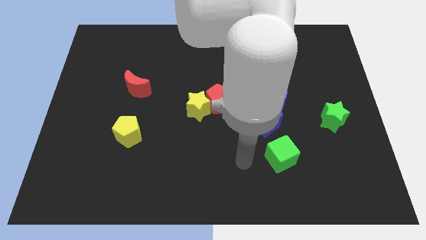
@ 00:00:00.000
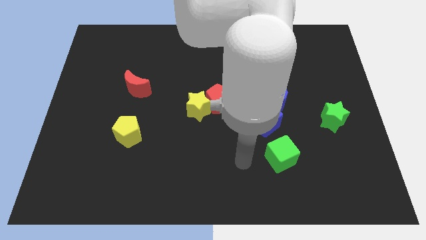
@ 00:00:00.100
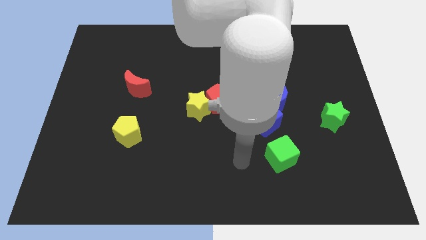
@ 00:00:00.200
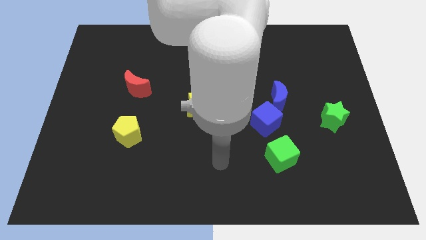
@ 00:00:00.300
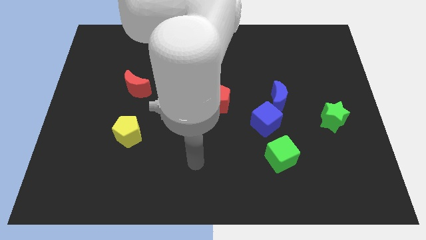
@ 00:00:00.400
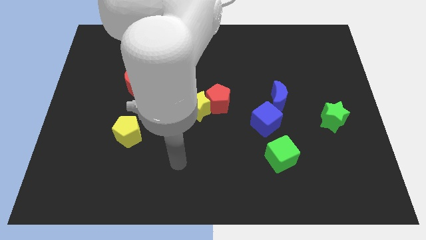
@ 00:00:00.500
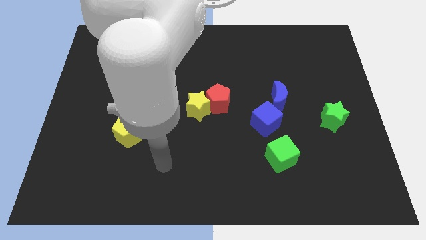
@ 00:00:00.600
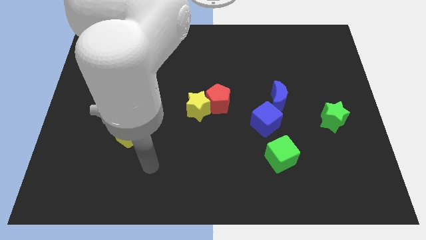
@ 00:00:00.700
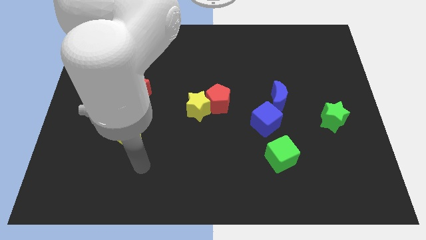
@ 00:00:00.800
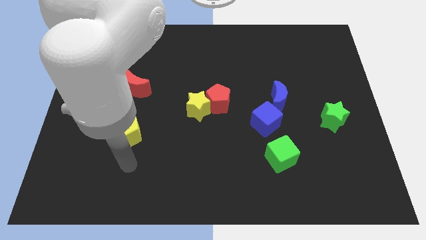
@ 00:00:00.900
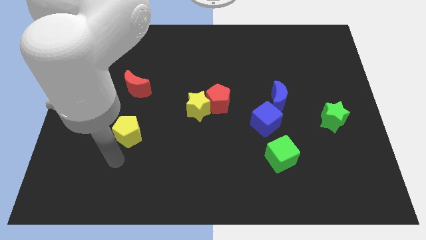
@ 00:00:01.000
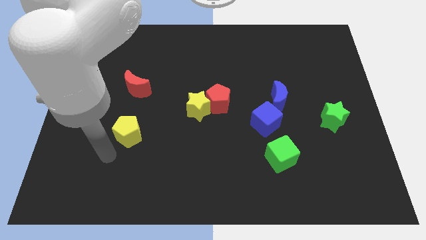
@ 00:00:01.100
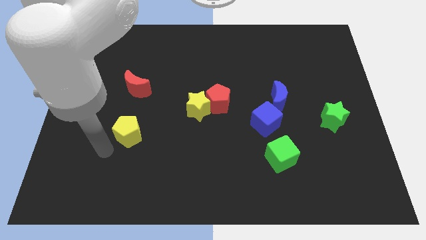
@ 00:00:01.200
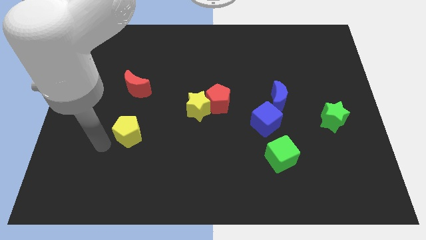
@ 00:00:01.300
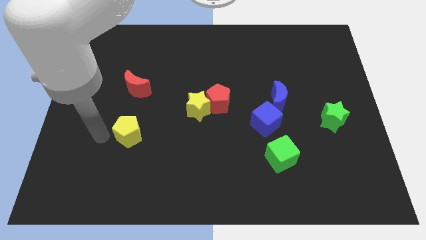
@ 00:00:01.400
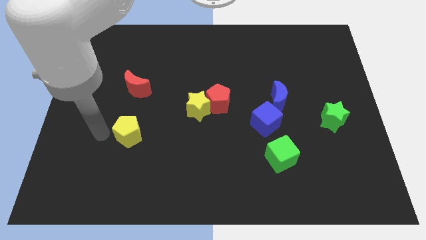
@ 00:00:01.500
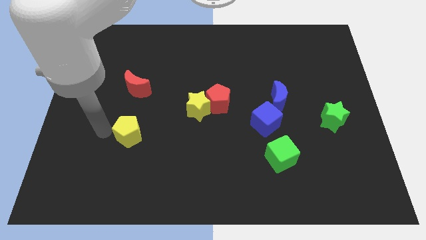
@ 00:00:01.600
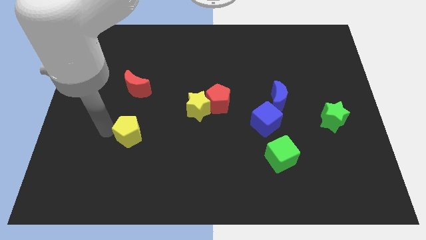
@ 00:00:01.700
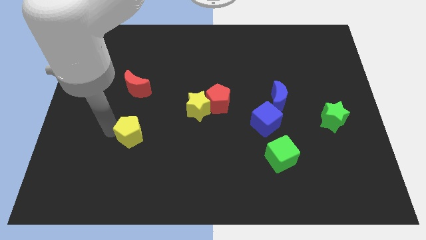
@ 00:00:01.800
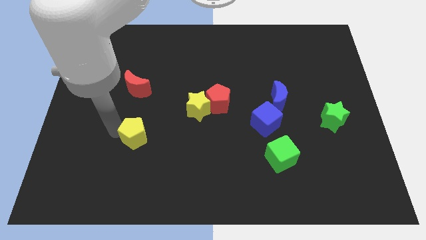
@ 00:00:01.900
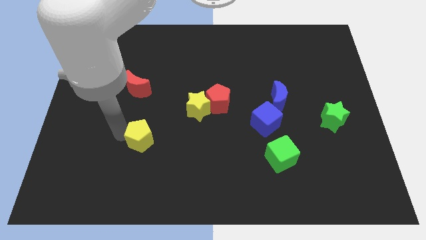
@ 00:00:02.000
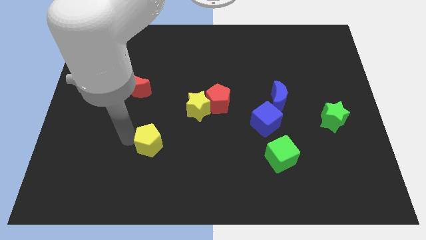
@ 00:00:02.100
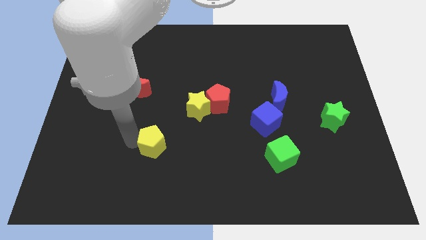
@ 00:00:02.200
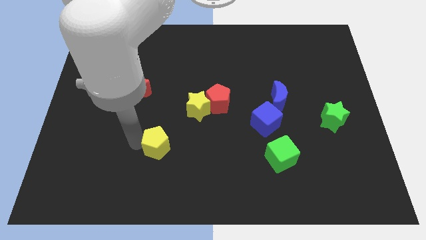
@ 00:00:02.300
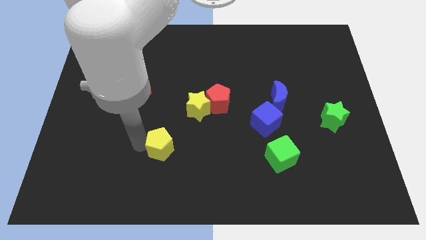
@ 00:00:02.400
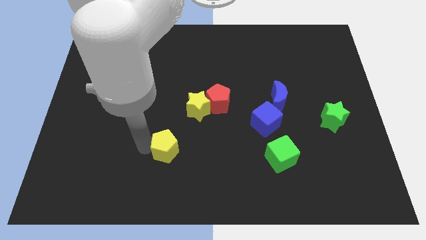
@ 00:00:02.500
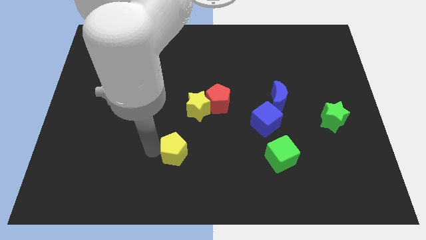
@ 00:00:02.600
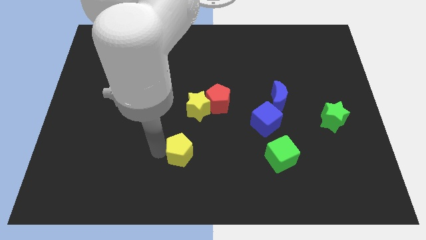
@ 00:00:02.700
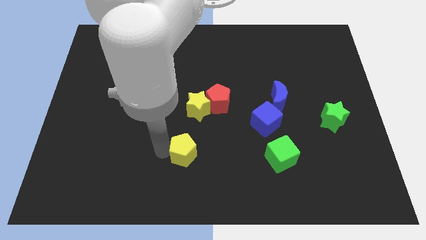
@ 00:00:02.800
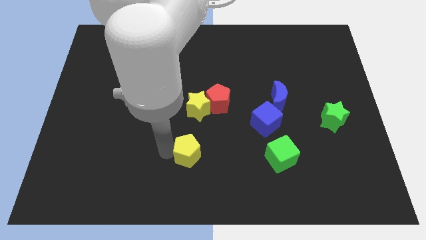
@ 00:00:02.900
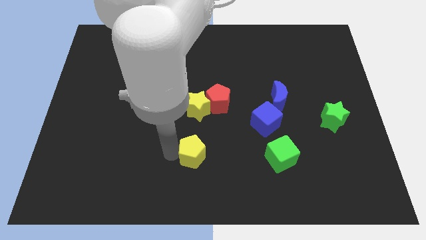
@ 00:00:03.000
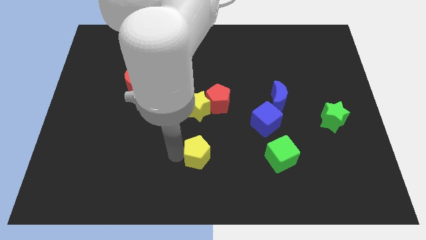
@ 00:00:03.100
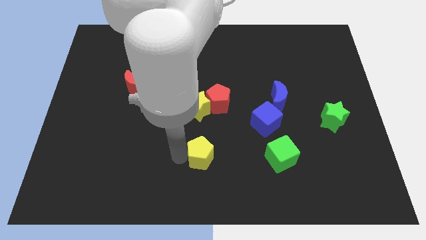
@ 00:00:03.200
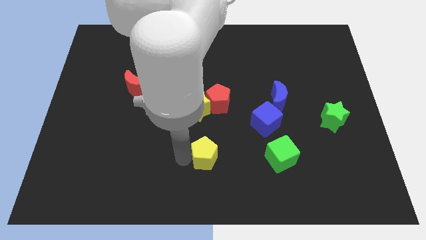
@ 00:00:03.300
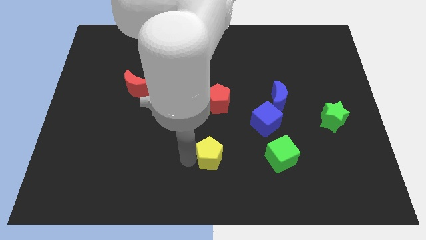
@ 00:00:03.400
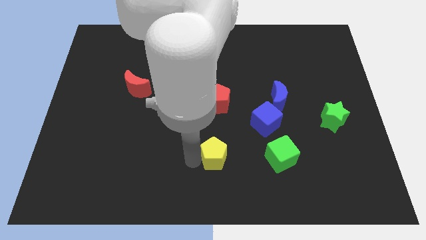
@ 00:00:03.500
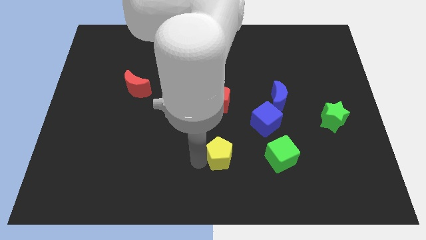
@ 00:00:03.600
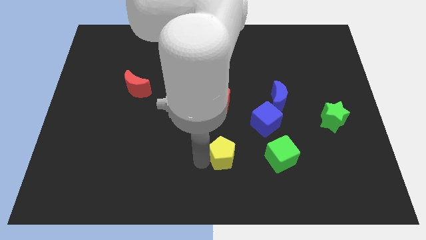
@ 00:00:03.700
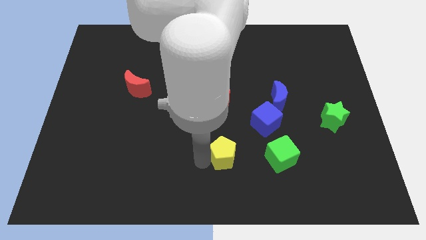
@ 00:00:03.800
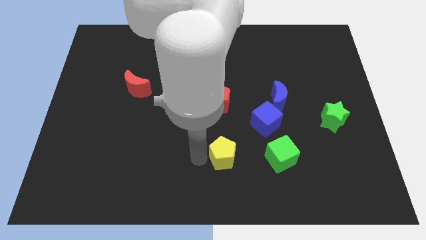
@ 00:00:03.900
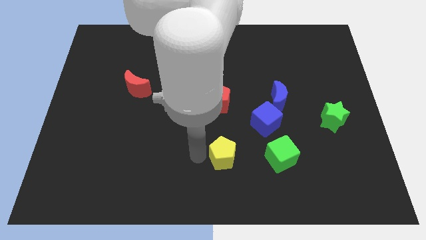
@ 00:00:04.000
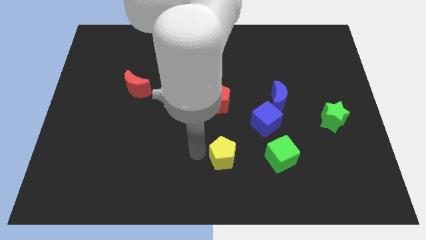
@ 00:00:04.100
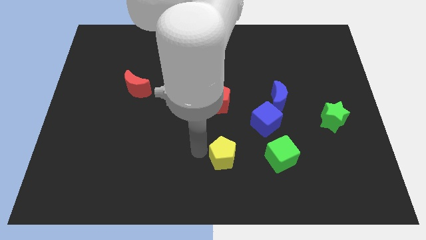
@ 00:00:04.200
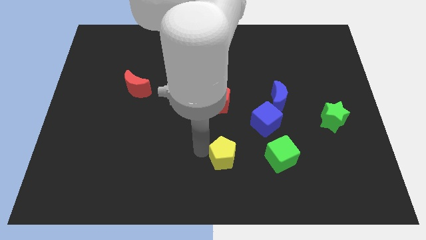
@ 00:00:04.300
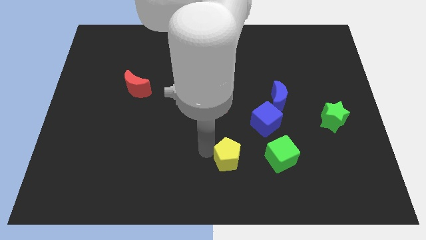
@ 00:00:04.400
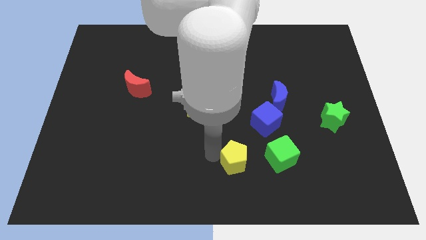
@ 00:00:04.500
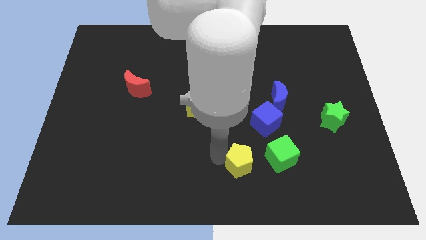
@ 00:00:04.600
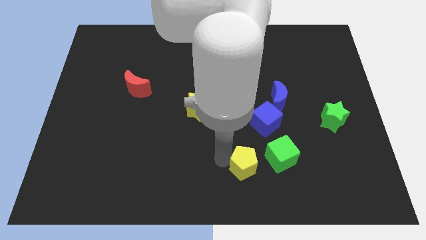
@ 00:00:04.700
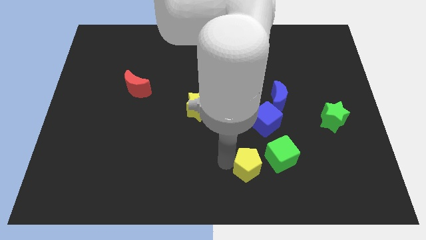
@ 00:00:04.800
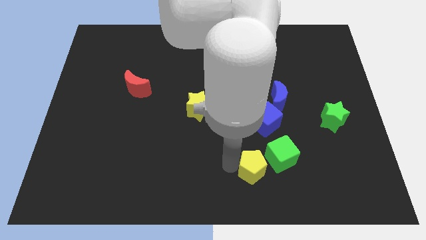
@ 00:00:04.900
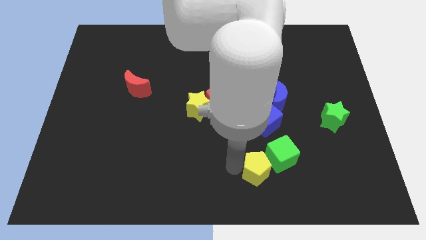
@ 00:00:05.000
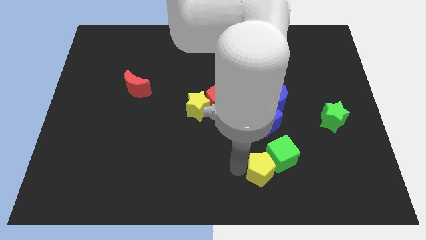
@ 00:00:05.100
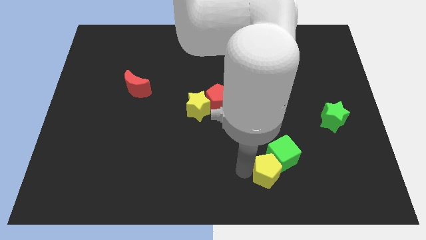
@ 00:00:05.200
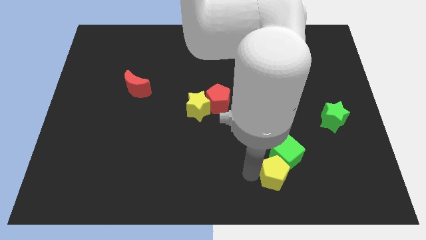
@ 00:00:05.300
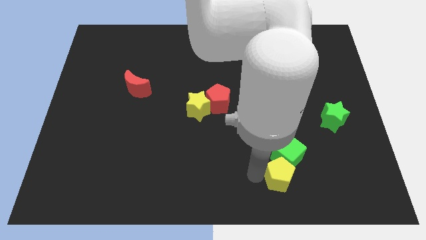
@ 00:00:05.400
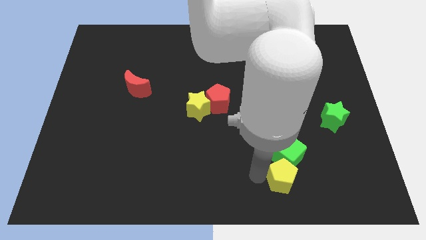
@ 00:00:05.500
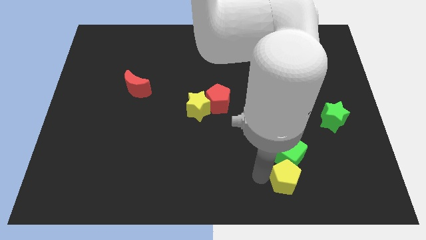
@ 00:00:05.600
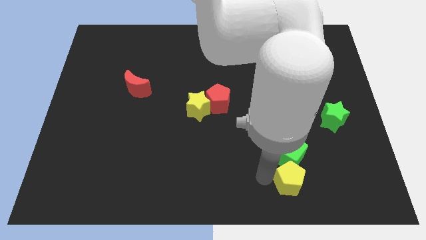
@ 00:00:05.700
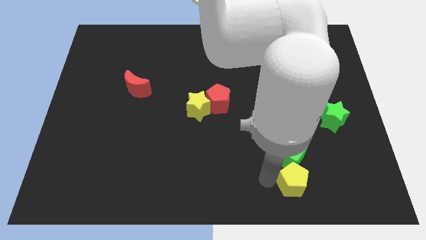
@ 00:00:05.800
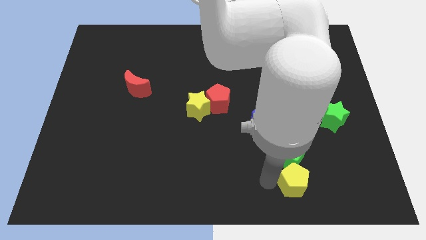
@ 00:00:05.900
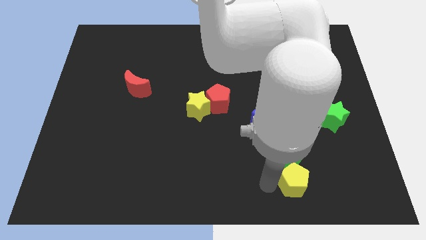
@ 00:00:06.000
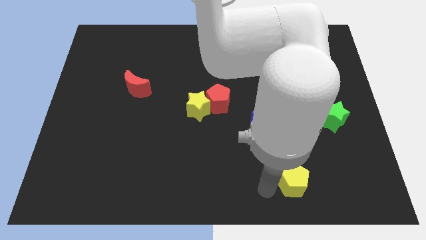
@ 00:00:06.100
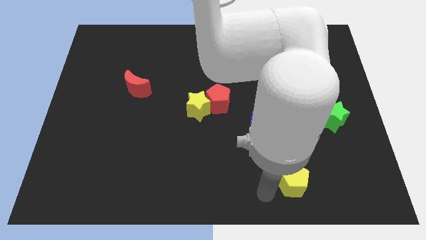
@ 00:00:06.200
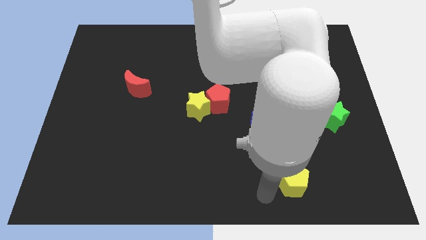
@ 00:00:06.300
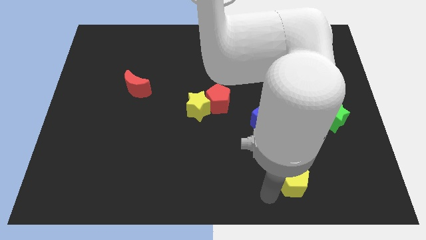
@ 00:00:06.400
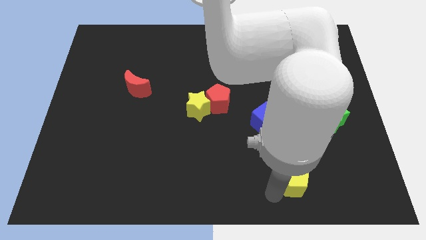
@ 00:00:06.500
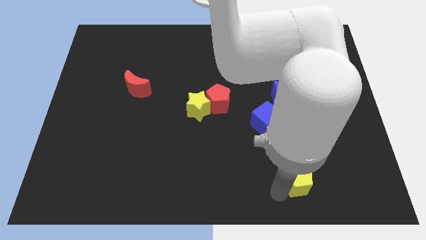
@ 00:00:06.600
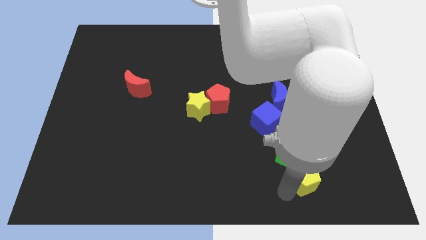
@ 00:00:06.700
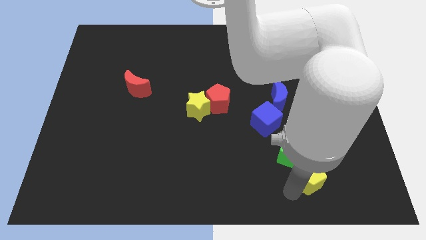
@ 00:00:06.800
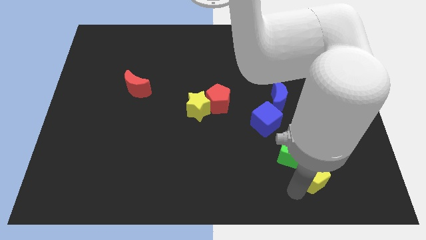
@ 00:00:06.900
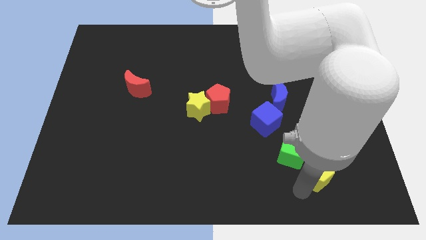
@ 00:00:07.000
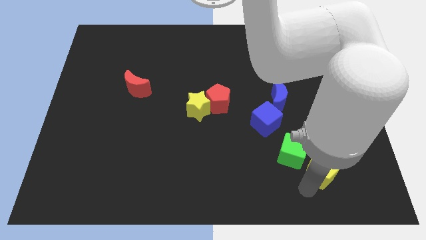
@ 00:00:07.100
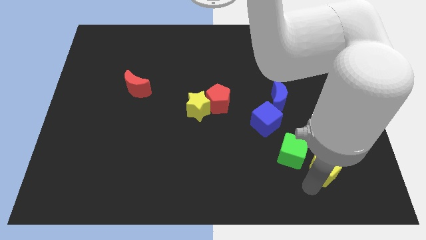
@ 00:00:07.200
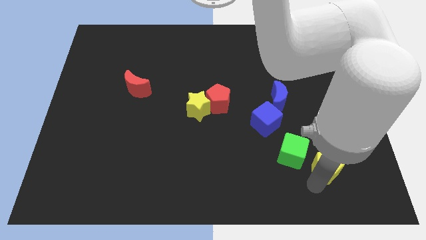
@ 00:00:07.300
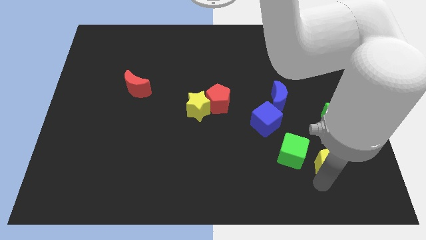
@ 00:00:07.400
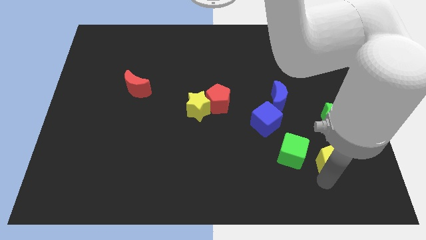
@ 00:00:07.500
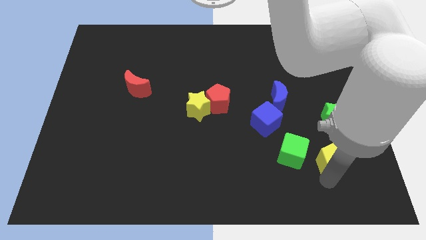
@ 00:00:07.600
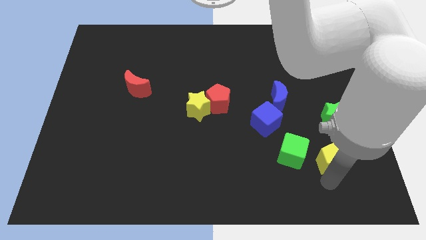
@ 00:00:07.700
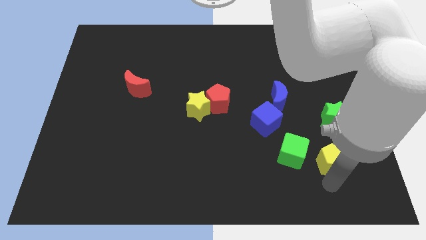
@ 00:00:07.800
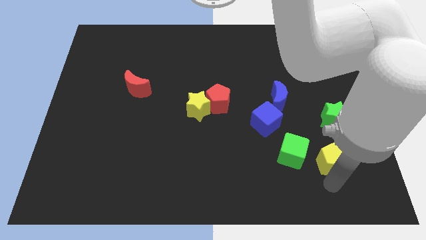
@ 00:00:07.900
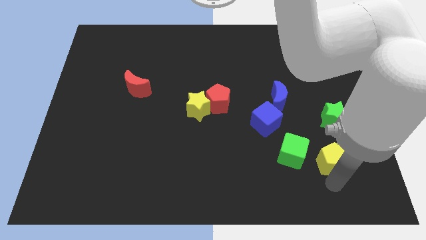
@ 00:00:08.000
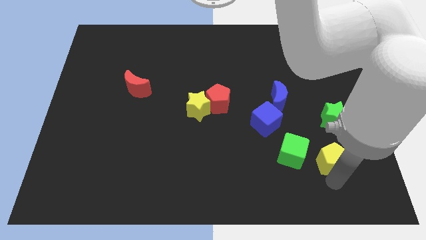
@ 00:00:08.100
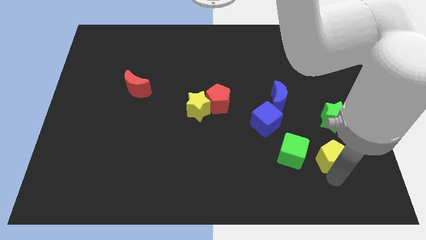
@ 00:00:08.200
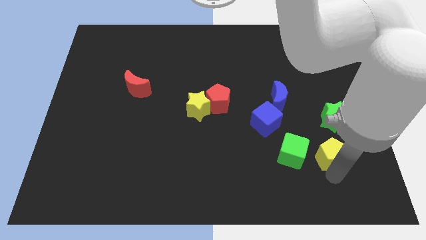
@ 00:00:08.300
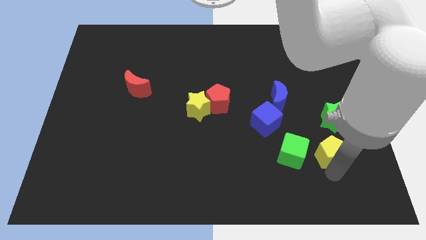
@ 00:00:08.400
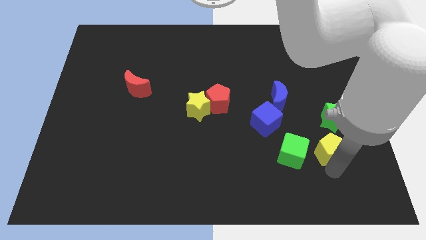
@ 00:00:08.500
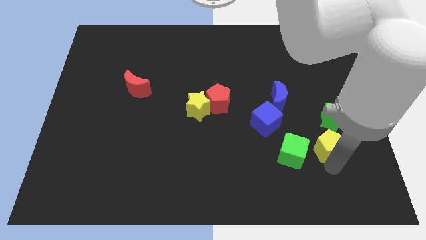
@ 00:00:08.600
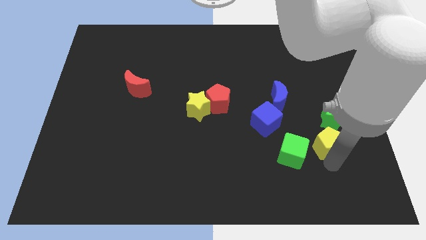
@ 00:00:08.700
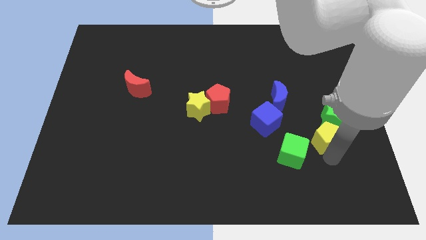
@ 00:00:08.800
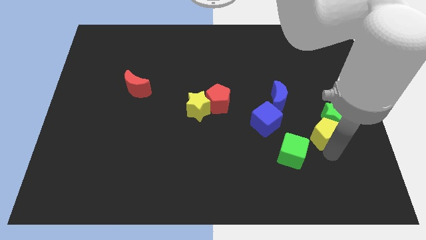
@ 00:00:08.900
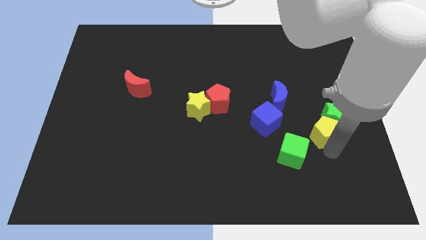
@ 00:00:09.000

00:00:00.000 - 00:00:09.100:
move the yellow pentagon towards the green star
